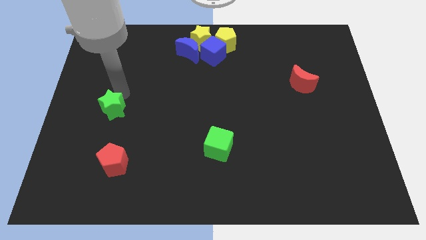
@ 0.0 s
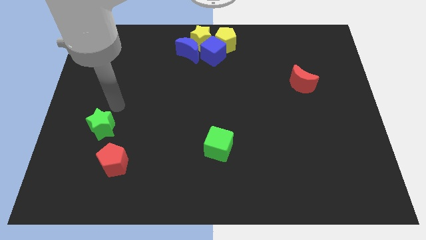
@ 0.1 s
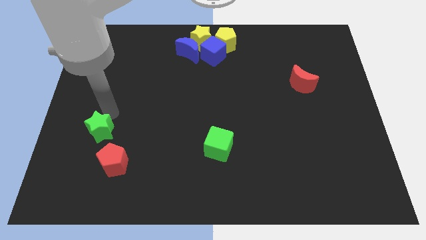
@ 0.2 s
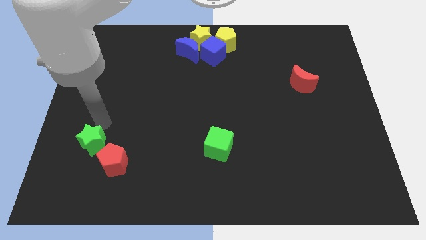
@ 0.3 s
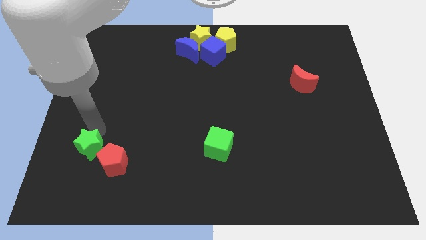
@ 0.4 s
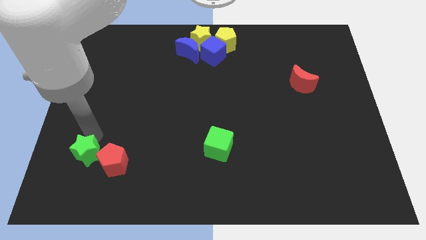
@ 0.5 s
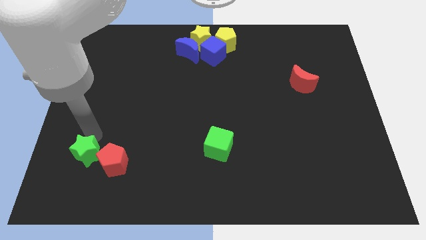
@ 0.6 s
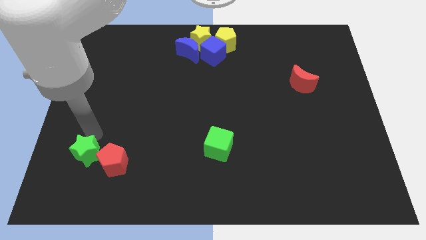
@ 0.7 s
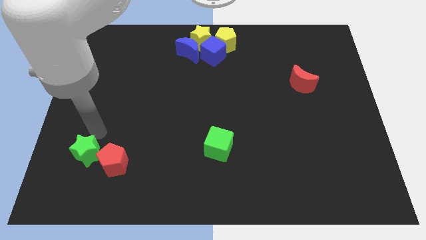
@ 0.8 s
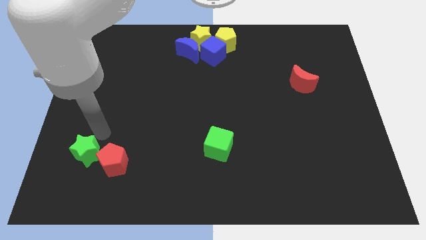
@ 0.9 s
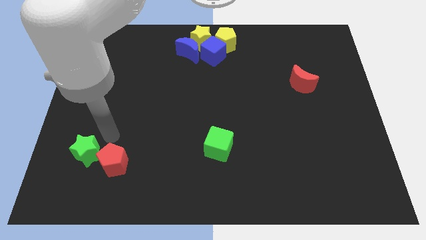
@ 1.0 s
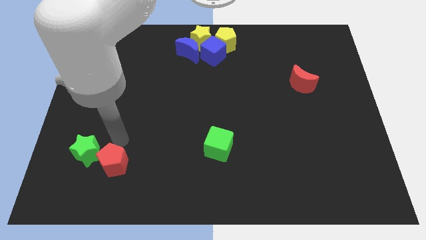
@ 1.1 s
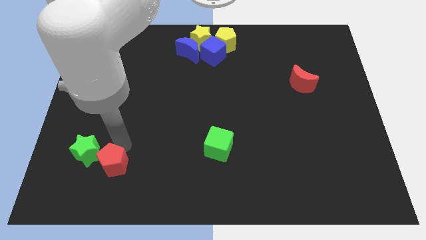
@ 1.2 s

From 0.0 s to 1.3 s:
move the green star to the left side of red pentagon

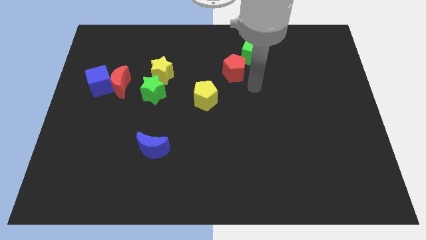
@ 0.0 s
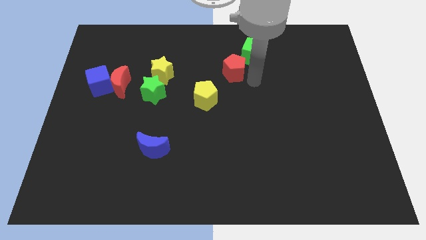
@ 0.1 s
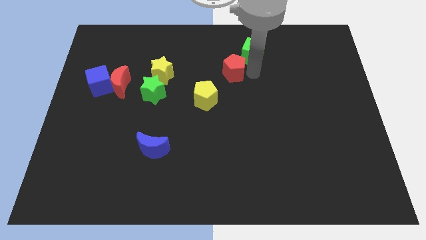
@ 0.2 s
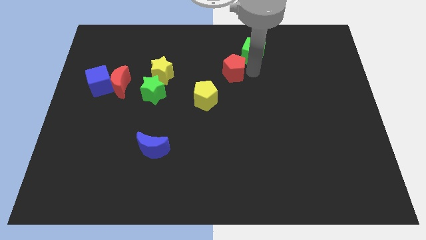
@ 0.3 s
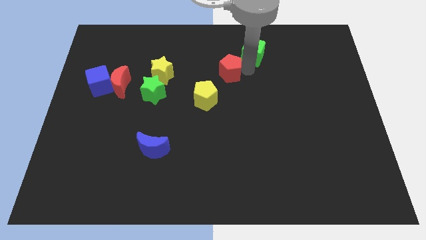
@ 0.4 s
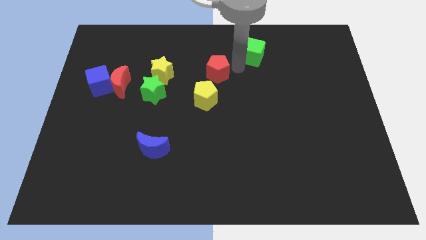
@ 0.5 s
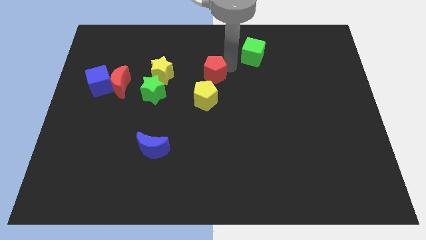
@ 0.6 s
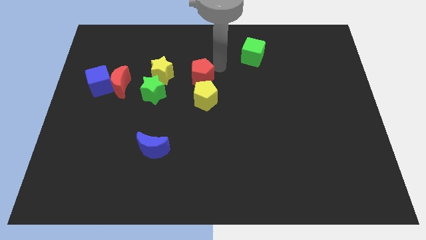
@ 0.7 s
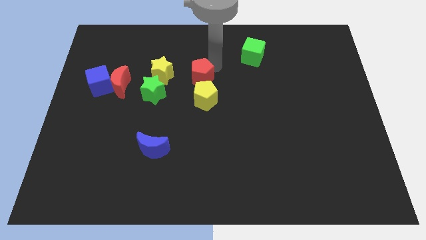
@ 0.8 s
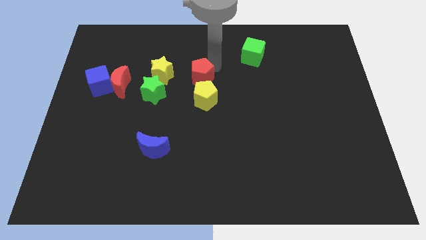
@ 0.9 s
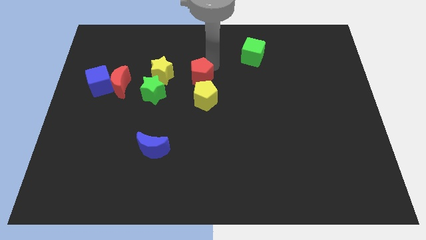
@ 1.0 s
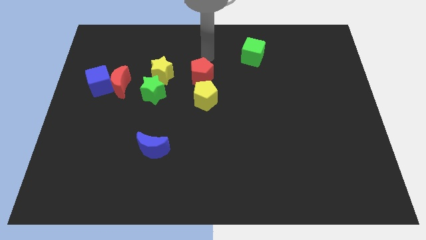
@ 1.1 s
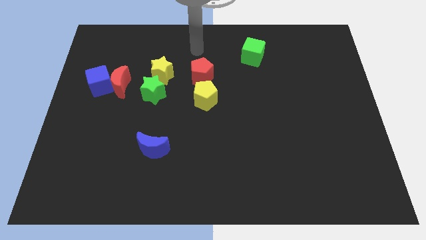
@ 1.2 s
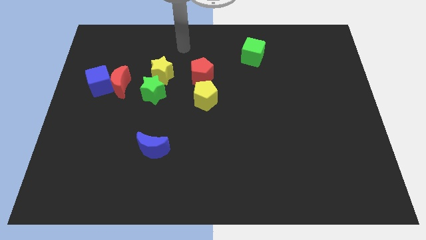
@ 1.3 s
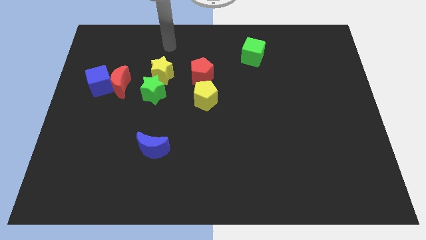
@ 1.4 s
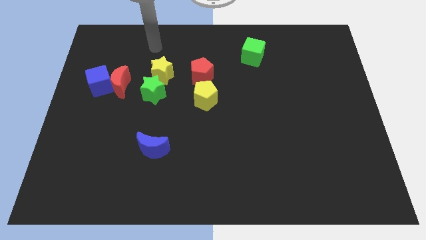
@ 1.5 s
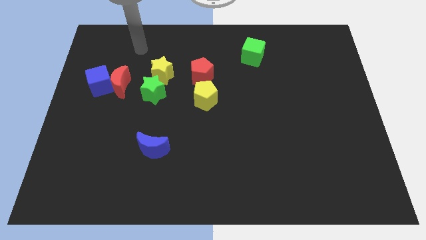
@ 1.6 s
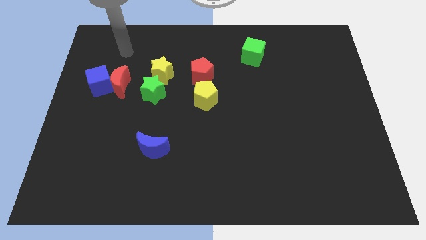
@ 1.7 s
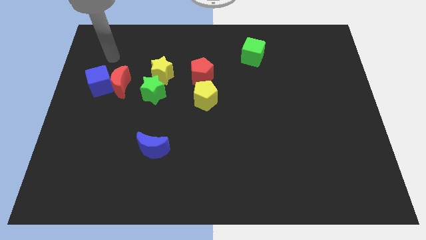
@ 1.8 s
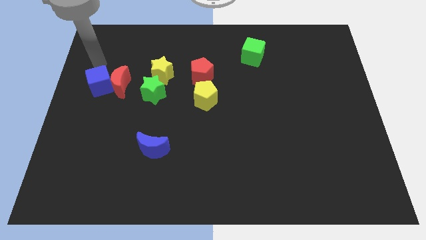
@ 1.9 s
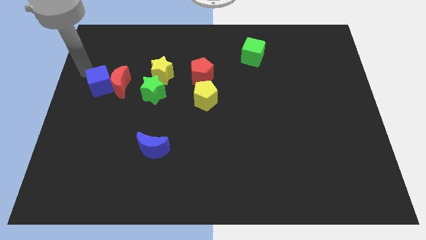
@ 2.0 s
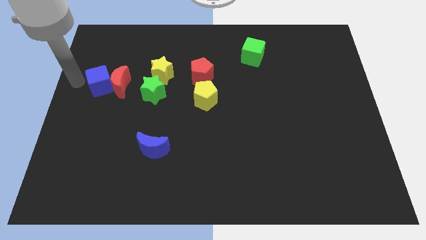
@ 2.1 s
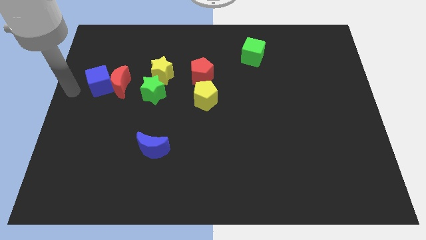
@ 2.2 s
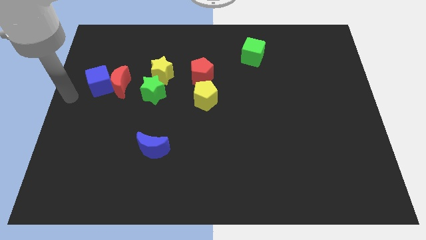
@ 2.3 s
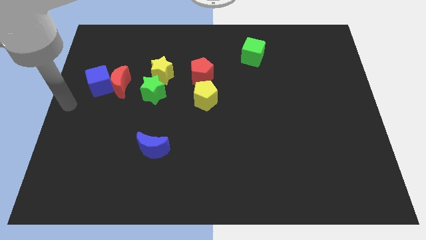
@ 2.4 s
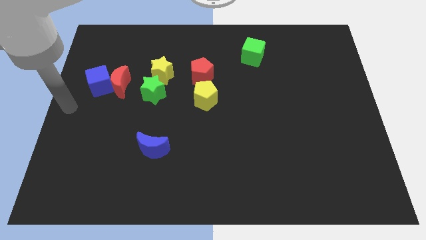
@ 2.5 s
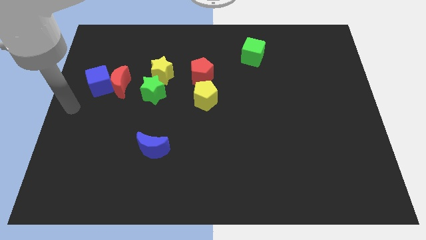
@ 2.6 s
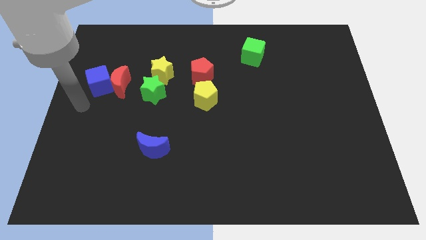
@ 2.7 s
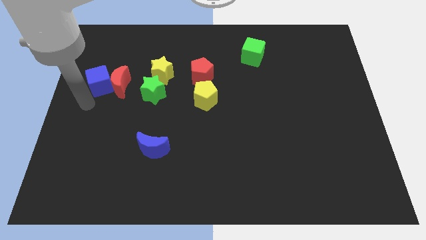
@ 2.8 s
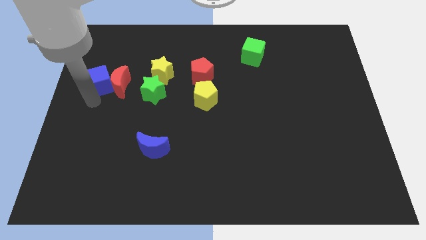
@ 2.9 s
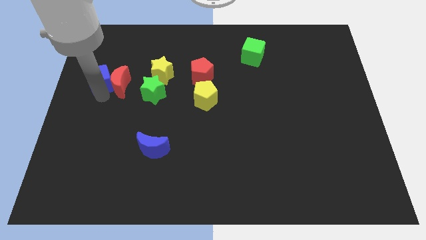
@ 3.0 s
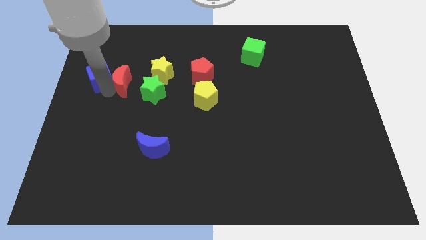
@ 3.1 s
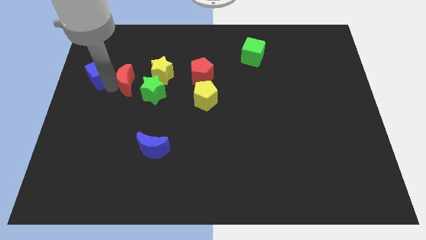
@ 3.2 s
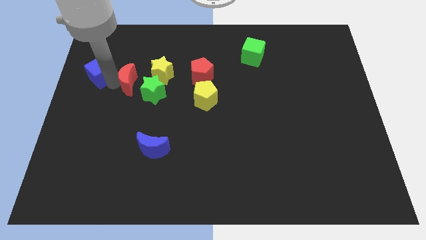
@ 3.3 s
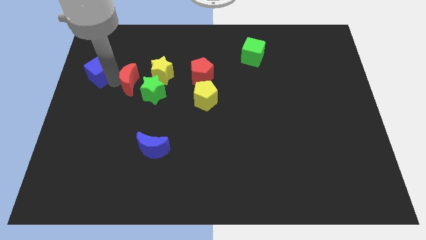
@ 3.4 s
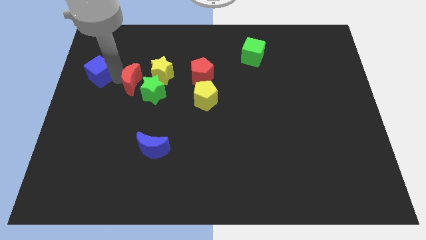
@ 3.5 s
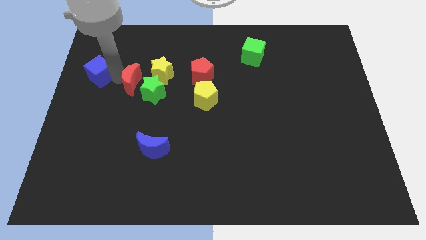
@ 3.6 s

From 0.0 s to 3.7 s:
separate the blue cube and red moon

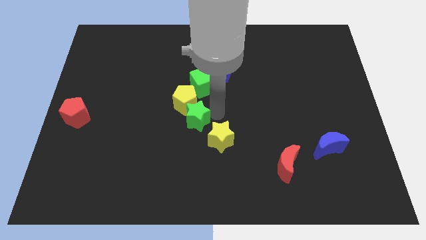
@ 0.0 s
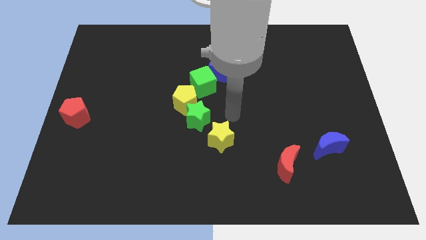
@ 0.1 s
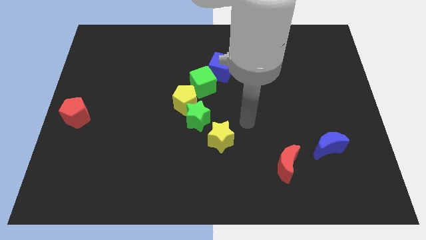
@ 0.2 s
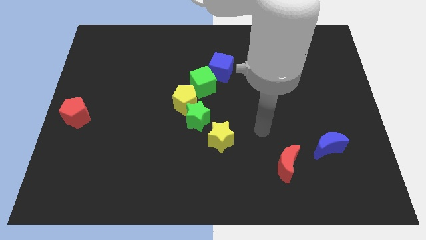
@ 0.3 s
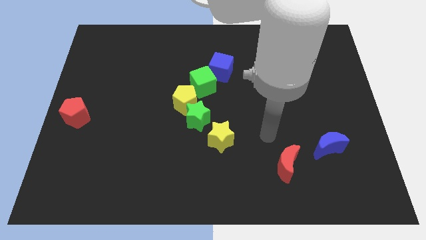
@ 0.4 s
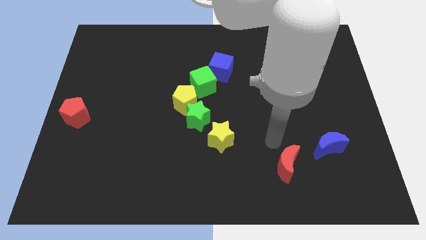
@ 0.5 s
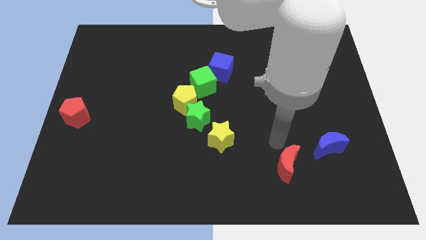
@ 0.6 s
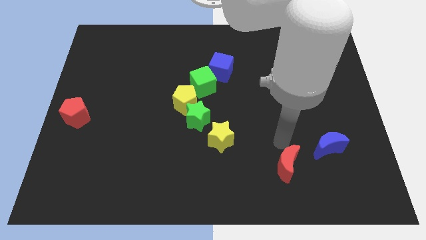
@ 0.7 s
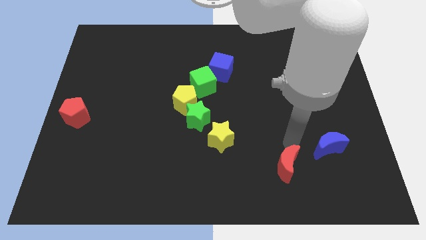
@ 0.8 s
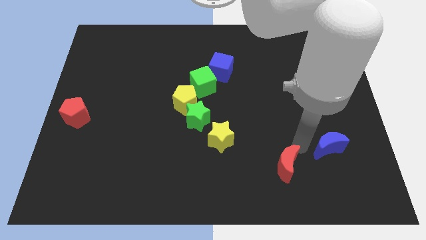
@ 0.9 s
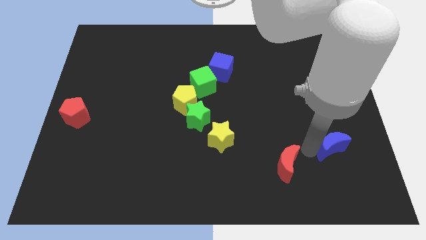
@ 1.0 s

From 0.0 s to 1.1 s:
place your arm close to blue moon

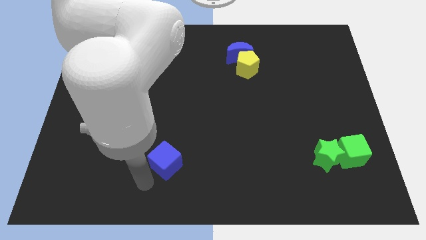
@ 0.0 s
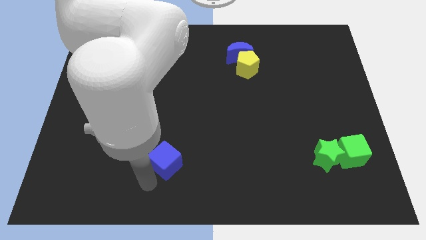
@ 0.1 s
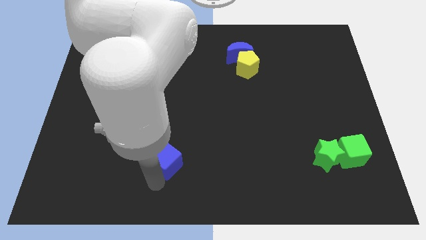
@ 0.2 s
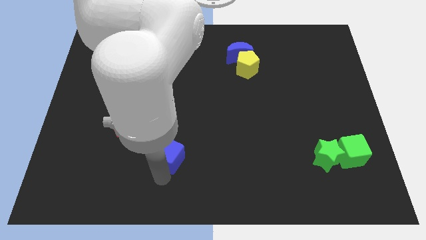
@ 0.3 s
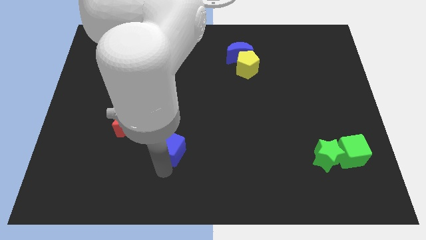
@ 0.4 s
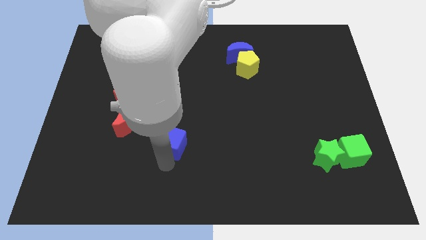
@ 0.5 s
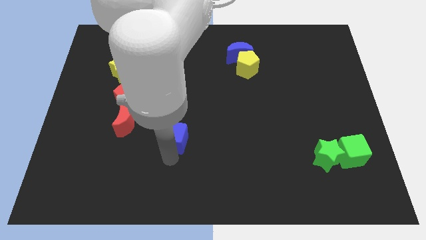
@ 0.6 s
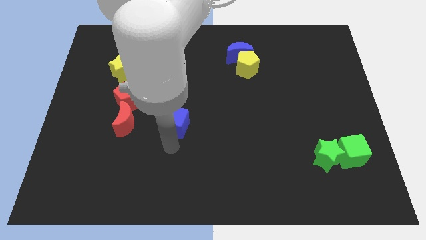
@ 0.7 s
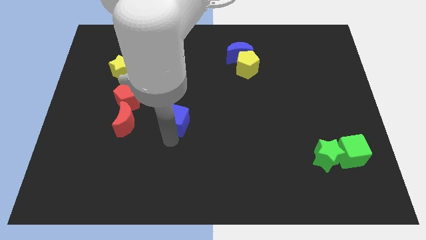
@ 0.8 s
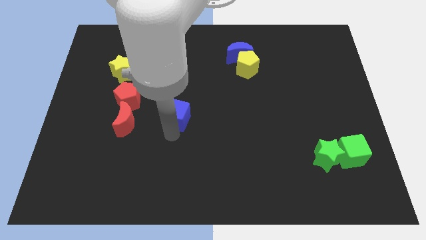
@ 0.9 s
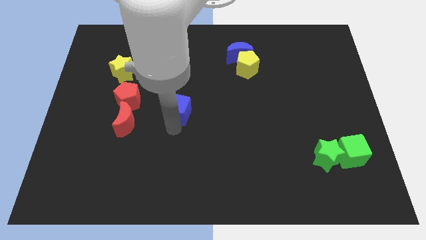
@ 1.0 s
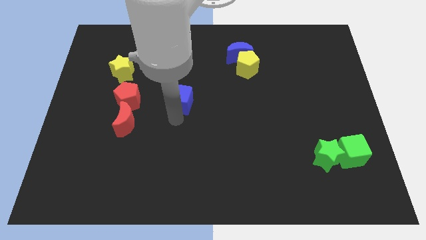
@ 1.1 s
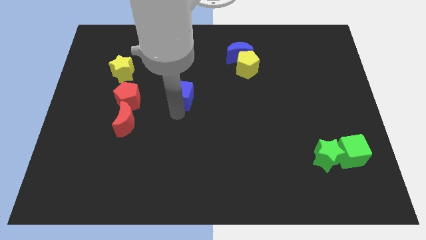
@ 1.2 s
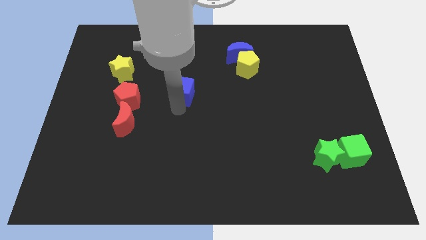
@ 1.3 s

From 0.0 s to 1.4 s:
push the blue cube to the right of the red pentagon

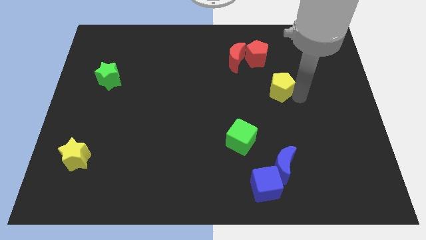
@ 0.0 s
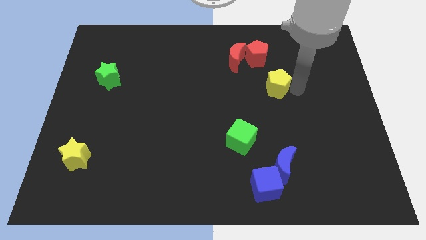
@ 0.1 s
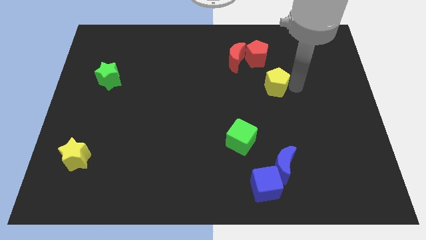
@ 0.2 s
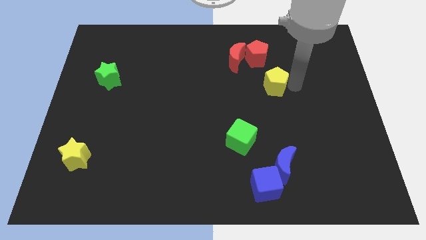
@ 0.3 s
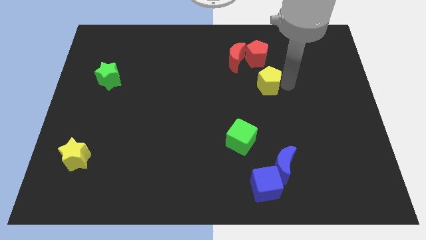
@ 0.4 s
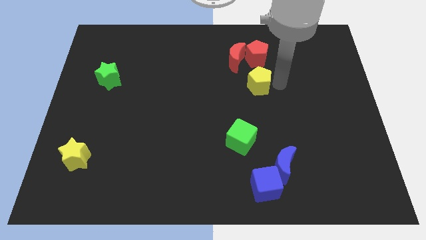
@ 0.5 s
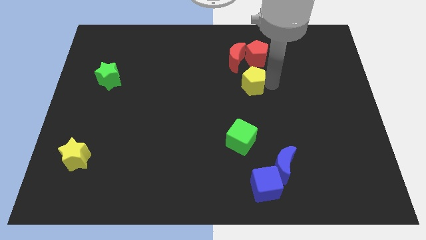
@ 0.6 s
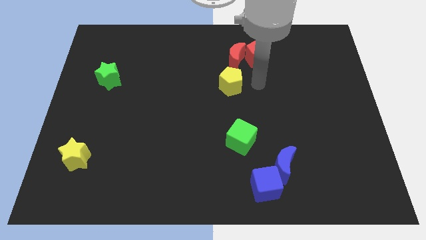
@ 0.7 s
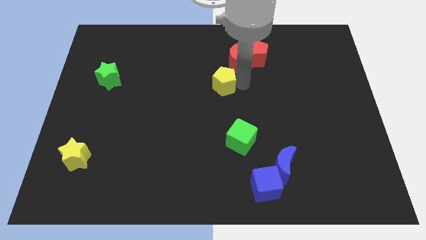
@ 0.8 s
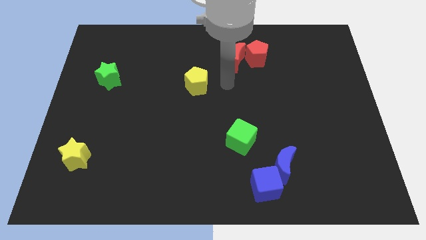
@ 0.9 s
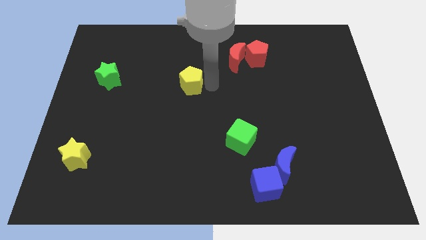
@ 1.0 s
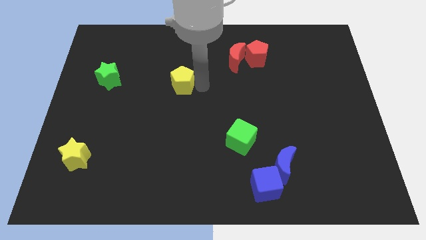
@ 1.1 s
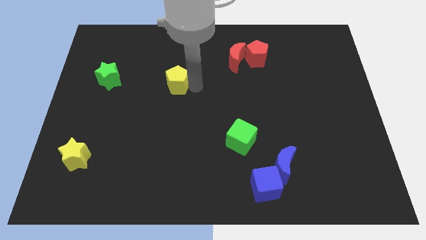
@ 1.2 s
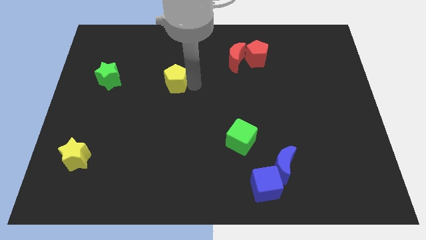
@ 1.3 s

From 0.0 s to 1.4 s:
move the yellow pentagon towards the green star
